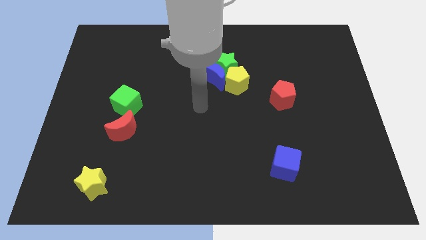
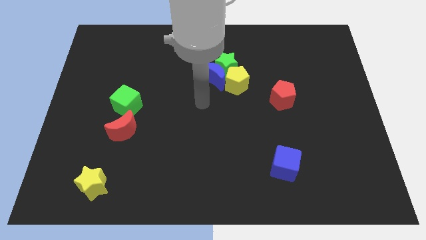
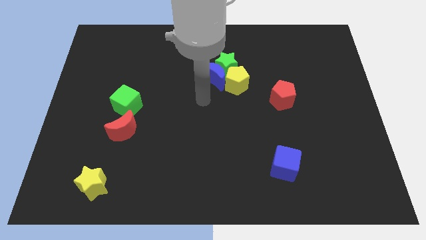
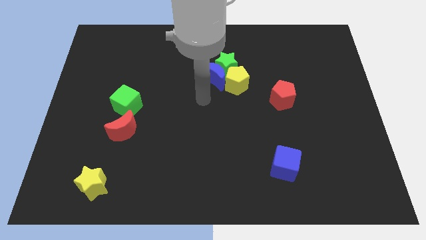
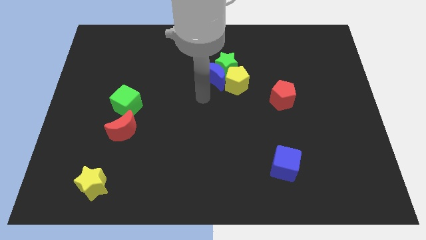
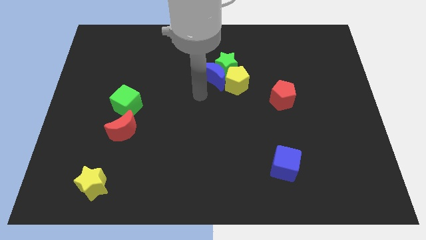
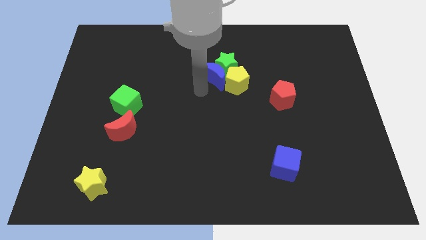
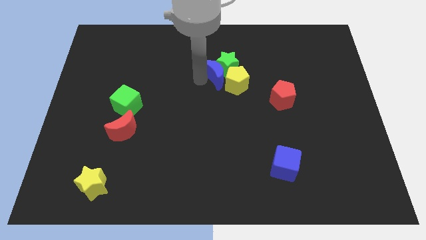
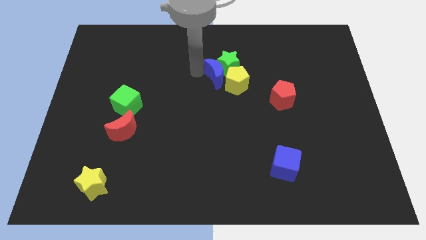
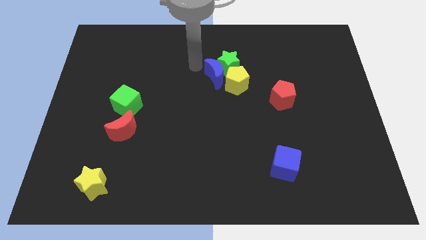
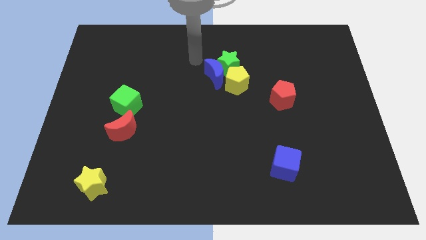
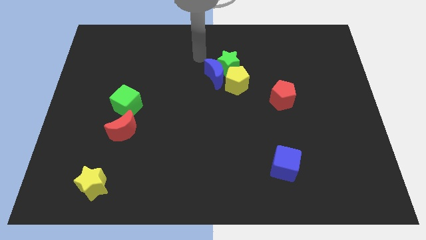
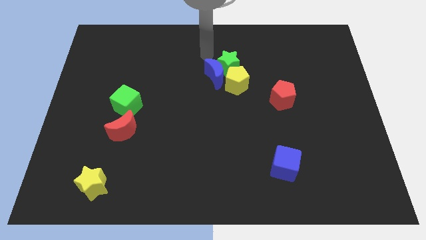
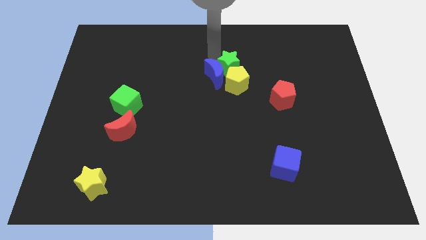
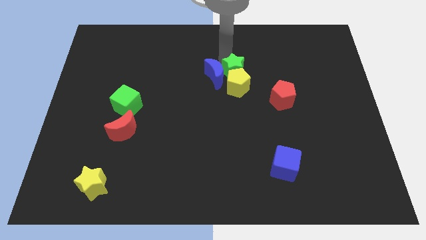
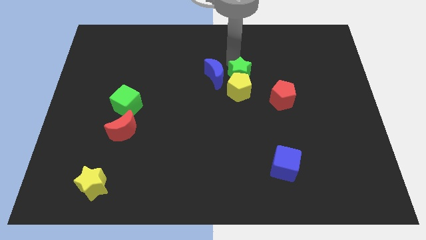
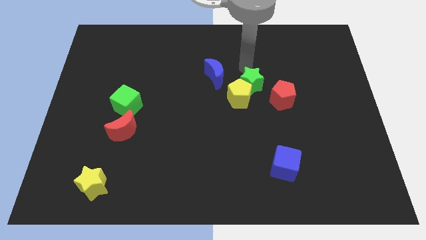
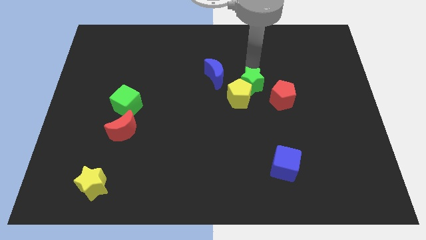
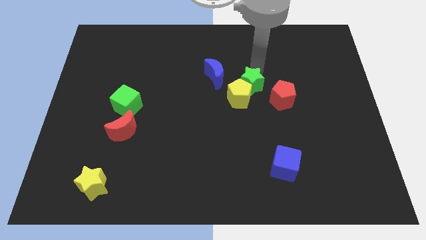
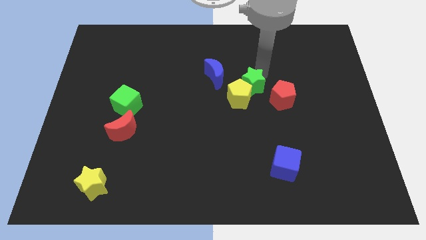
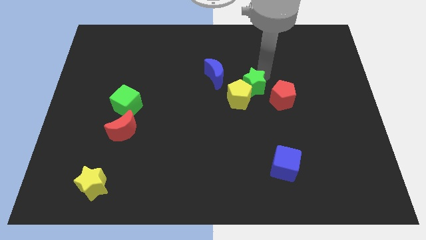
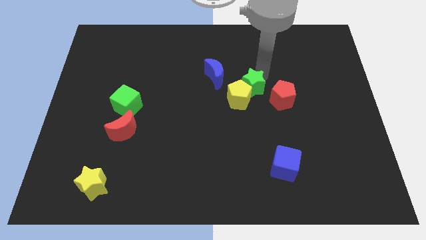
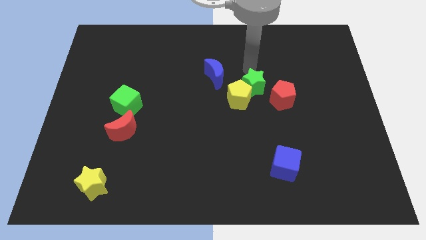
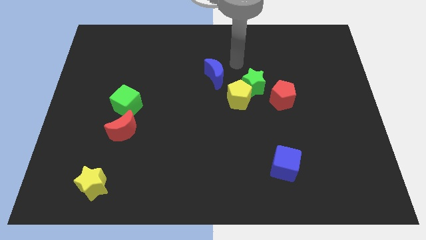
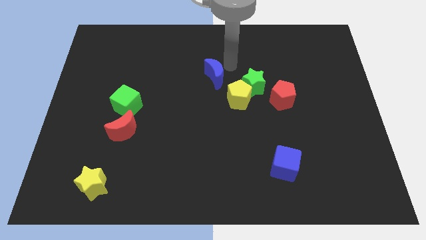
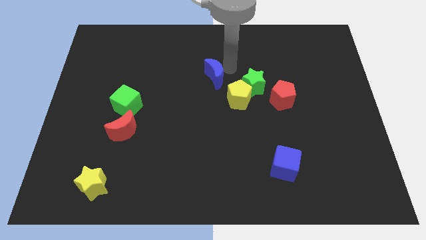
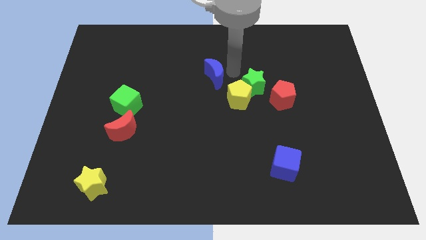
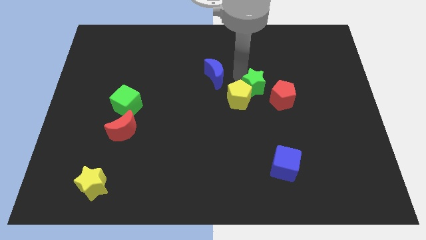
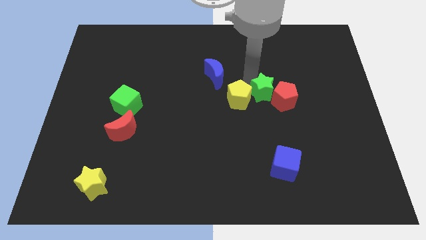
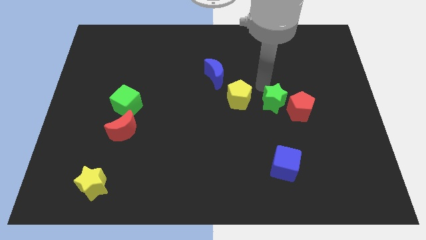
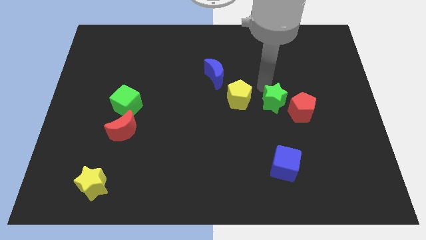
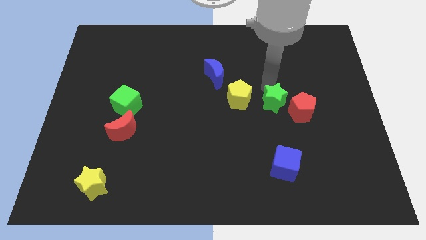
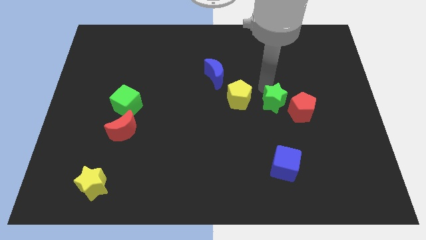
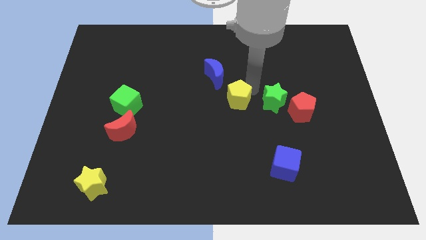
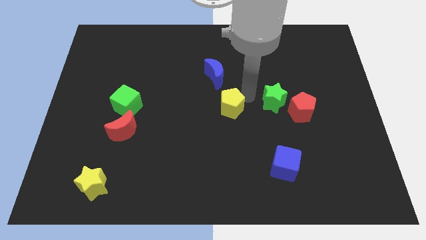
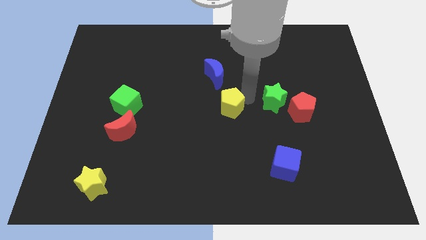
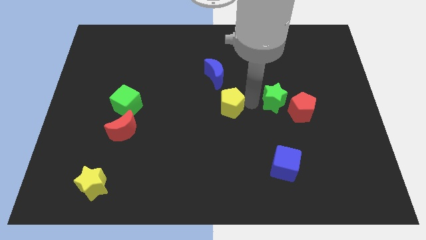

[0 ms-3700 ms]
separate the green star from yellow pentagon

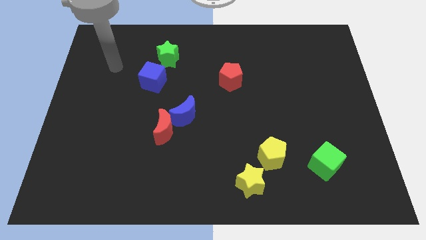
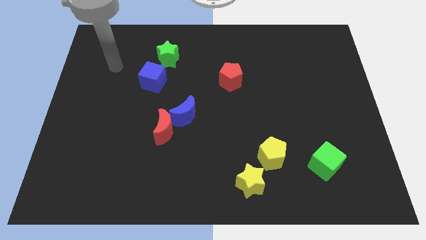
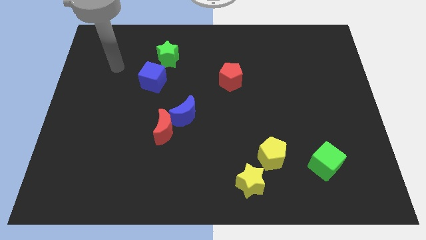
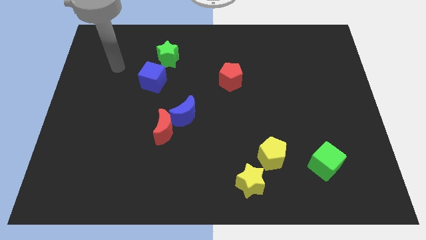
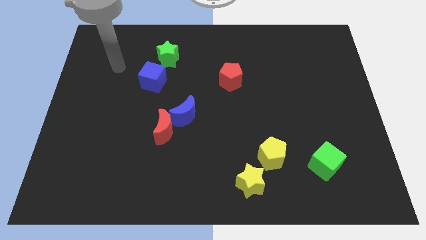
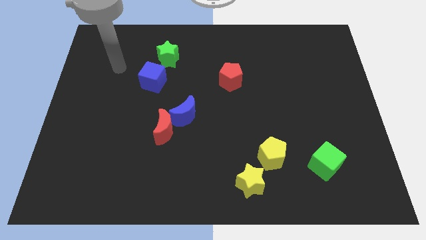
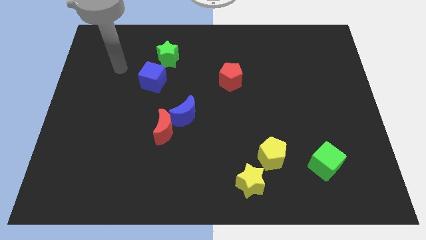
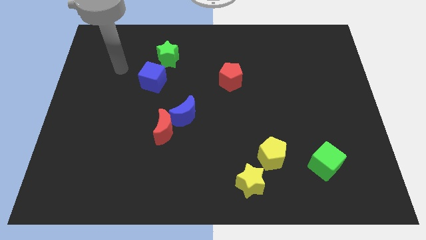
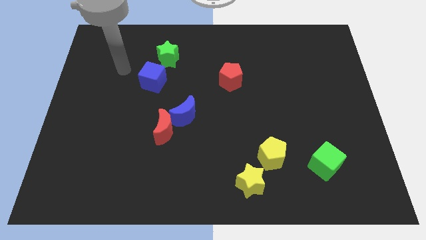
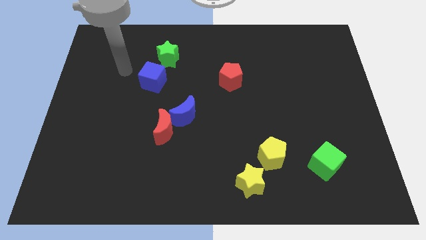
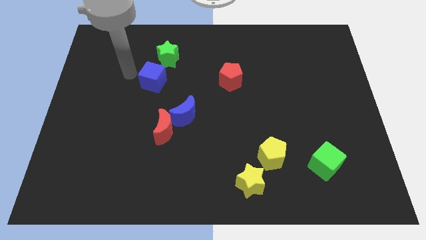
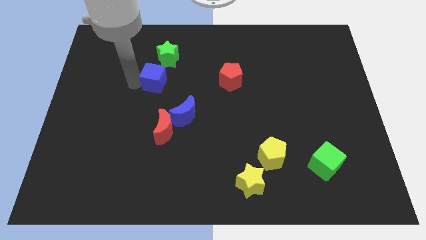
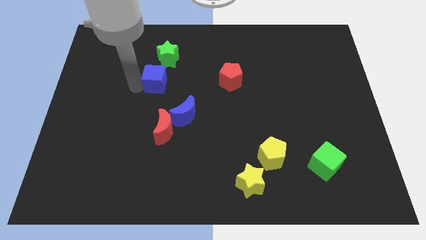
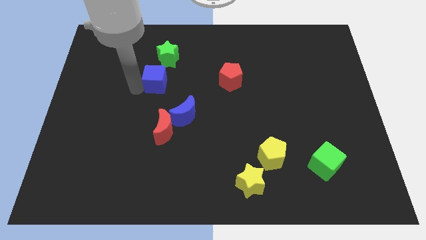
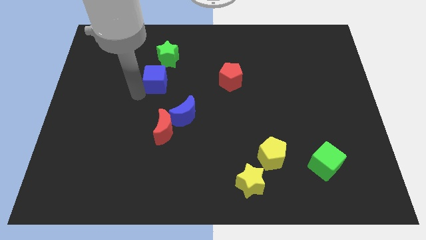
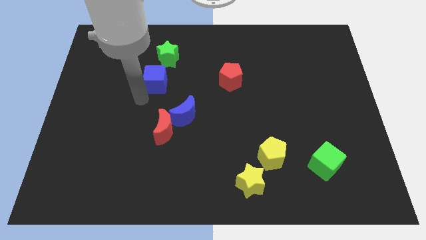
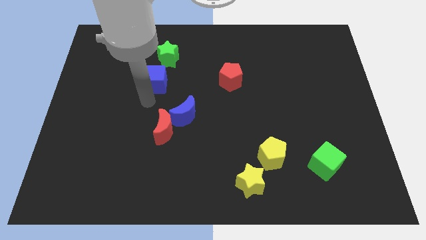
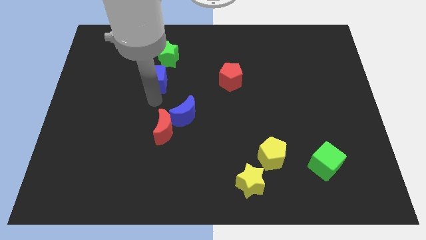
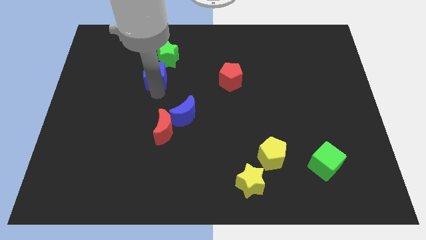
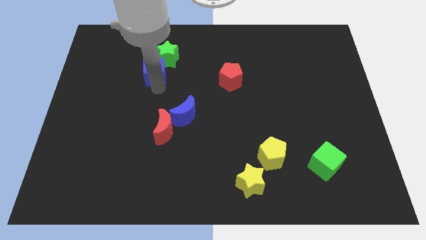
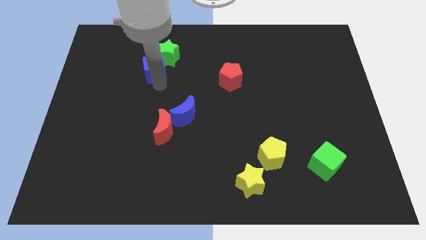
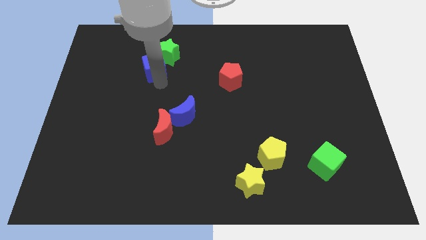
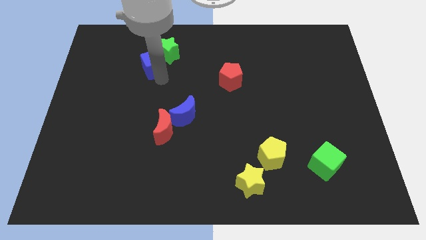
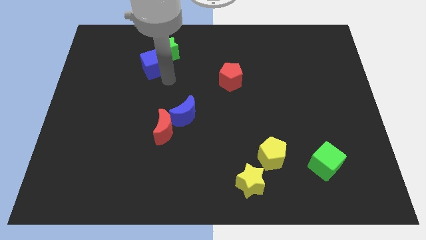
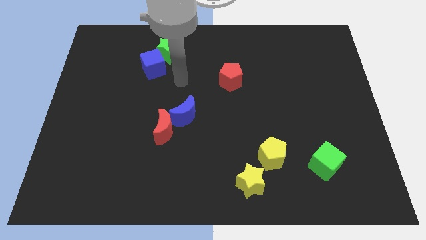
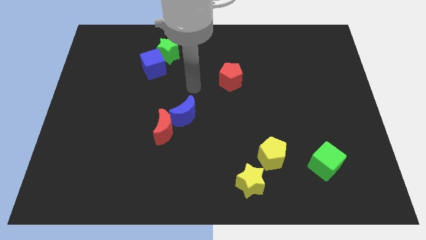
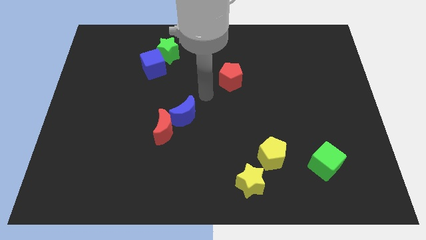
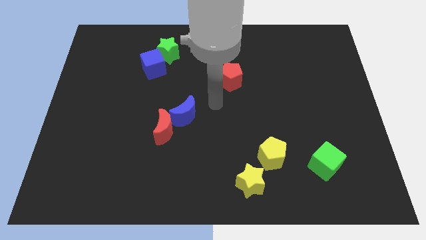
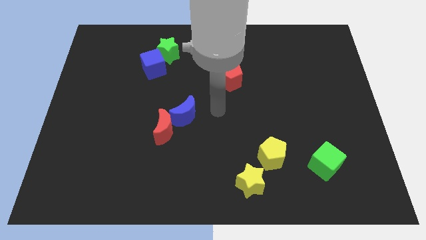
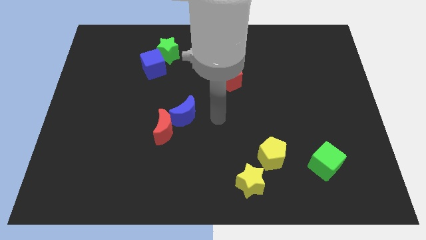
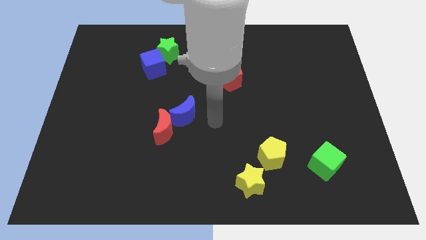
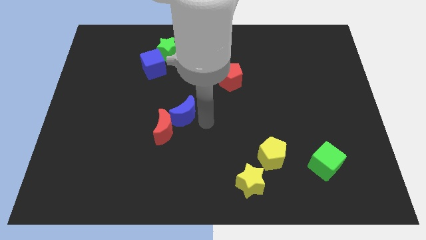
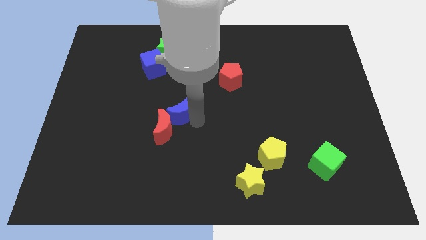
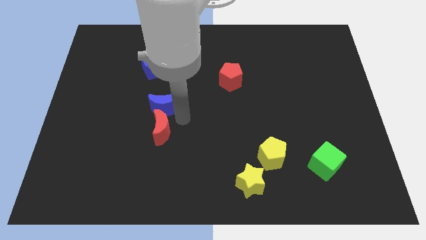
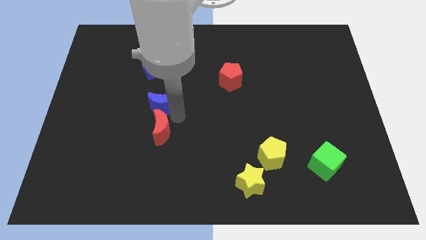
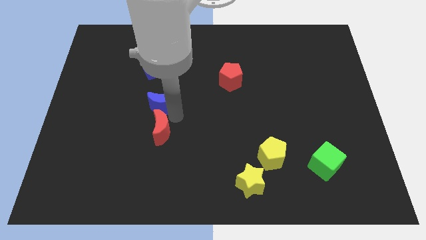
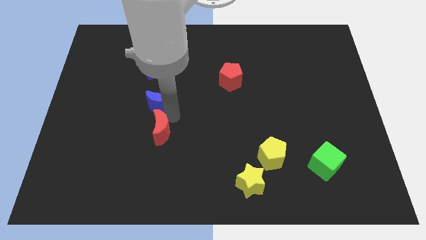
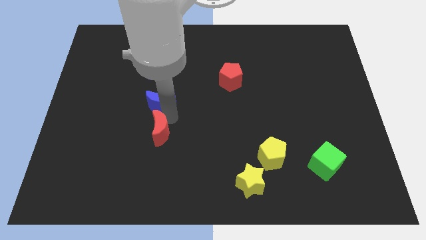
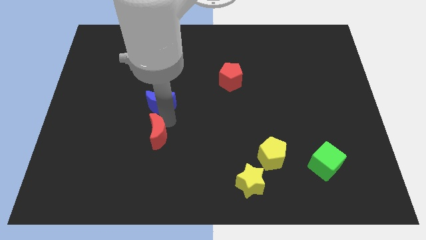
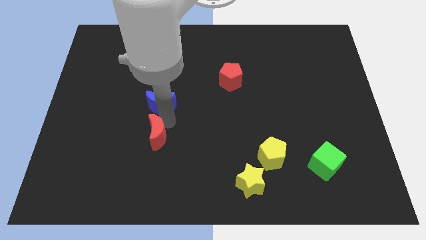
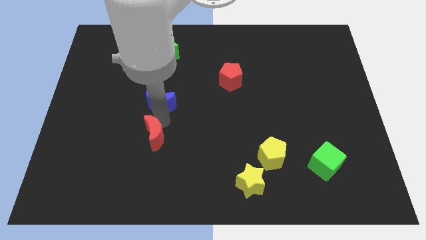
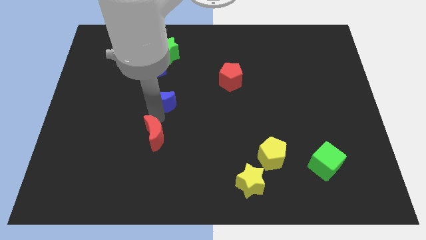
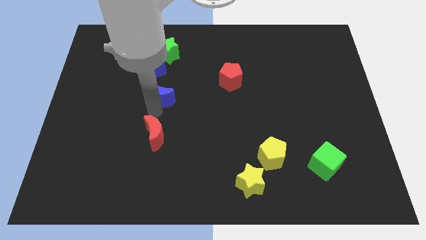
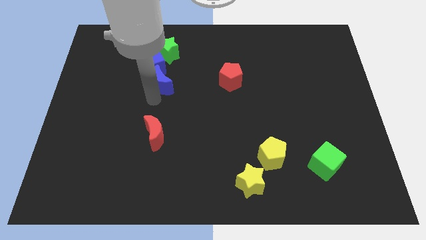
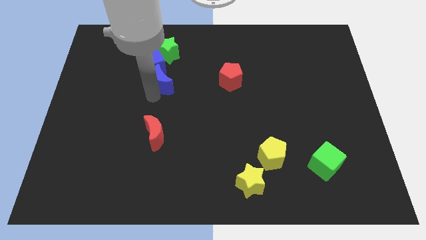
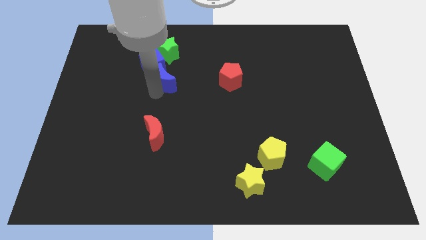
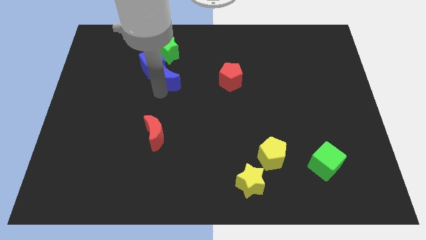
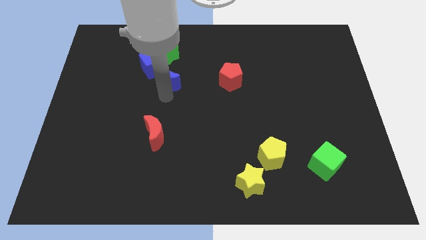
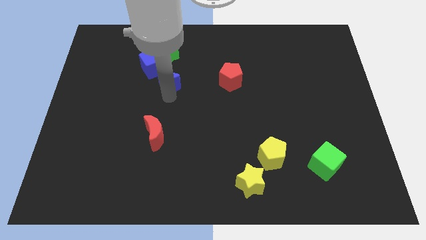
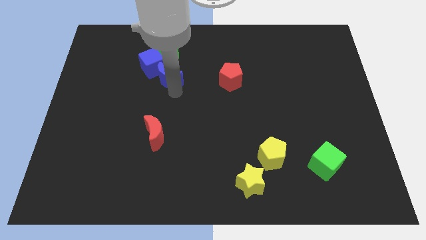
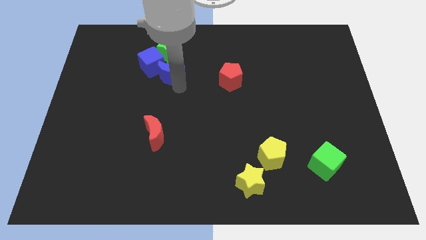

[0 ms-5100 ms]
place the blue moon underneath the blue cube

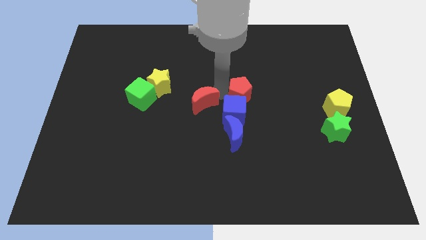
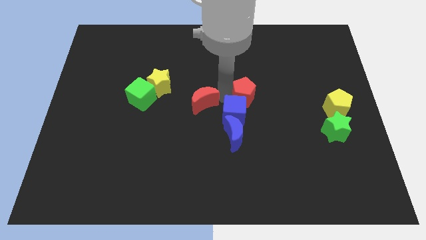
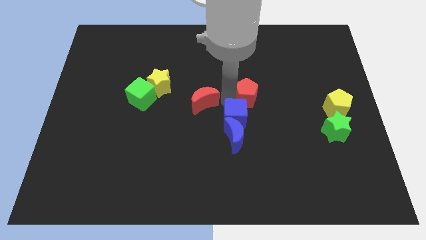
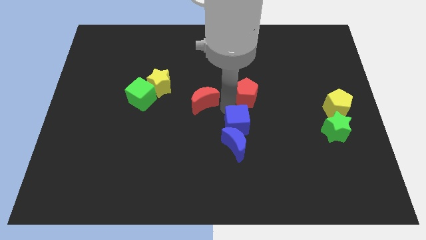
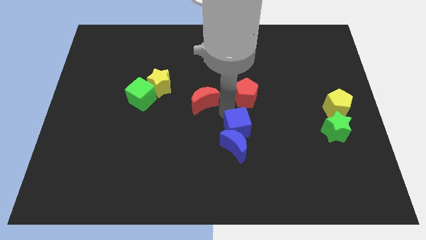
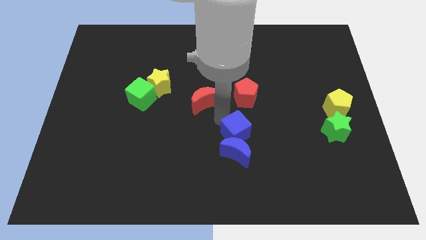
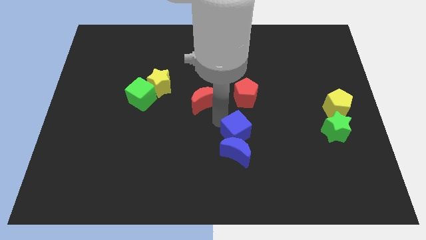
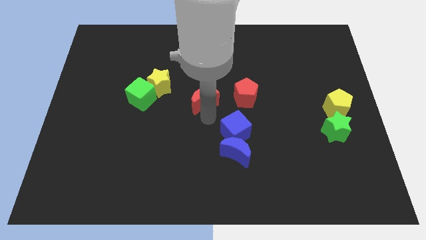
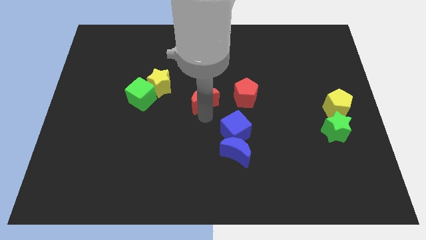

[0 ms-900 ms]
push the group of blue blocks to the bottom
